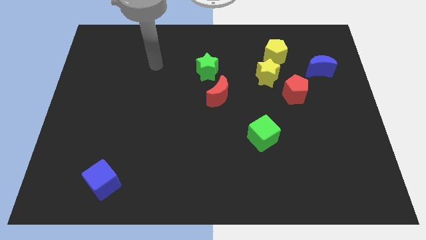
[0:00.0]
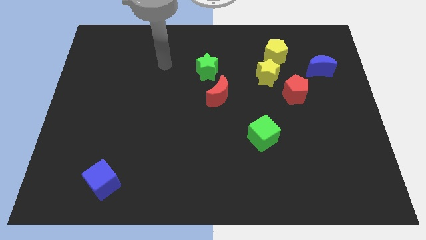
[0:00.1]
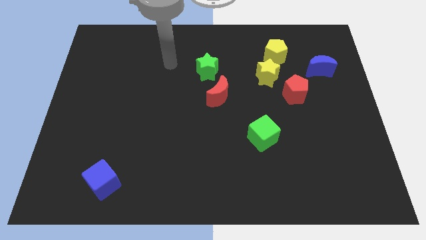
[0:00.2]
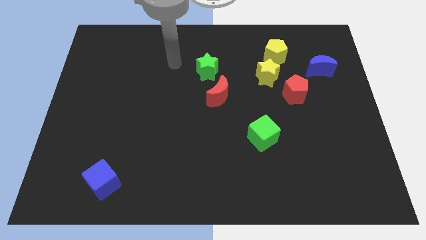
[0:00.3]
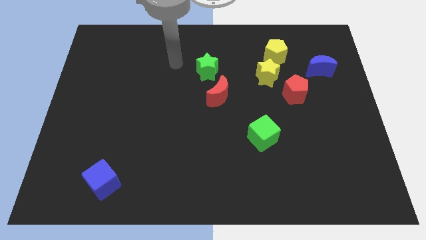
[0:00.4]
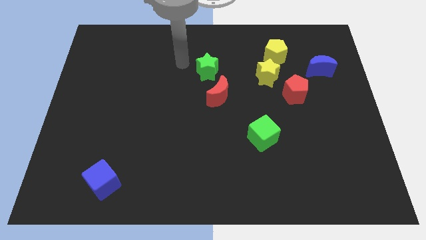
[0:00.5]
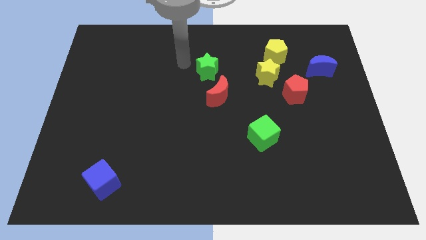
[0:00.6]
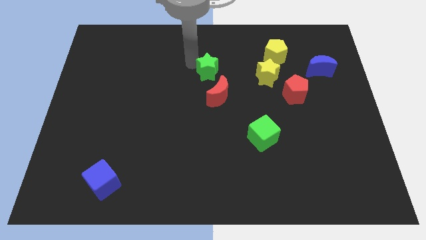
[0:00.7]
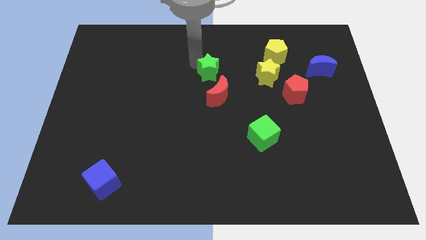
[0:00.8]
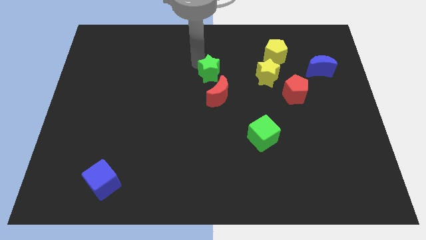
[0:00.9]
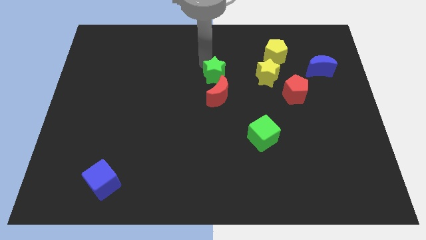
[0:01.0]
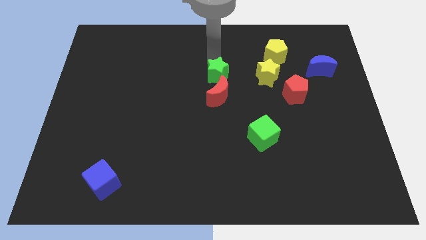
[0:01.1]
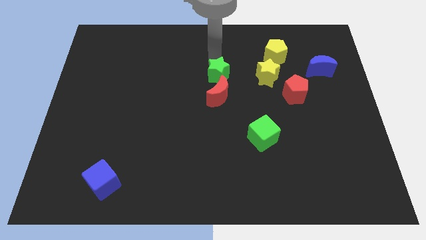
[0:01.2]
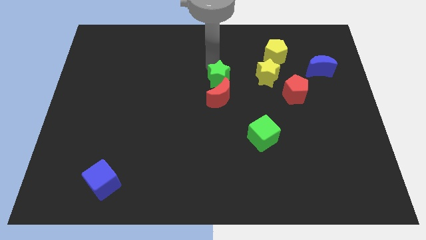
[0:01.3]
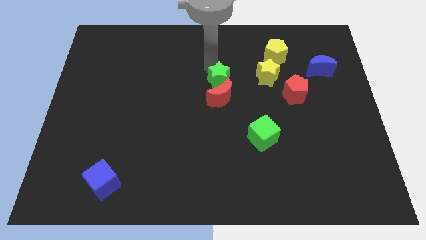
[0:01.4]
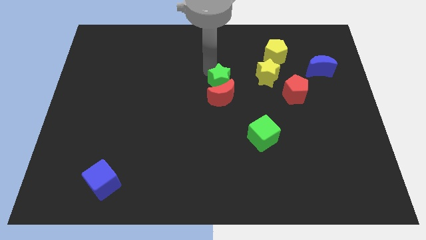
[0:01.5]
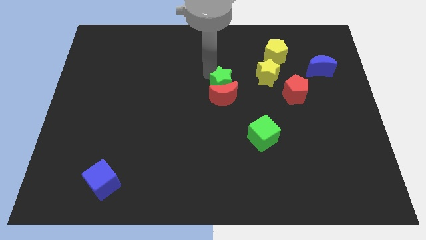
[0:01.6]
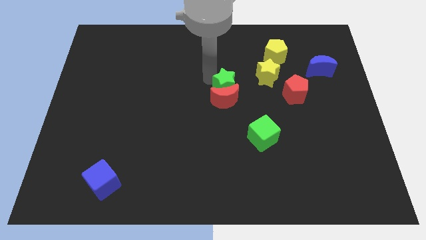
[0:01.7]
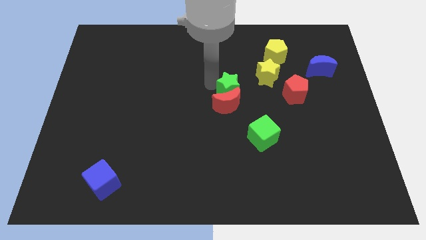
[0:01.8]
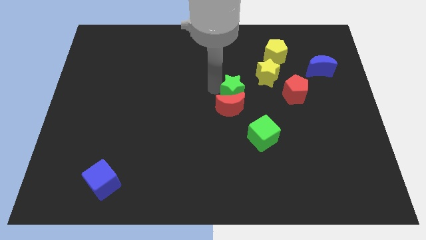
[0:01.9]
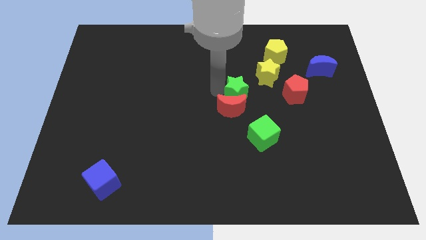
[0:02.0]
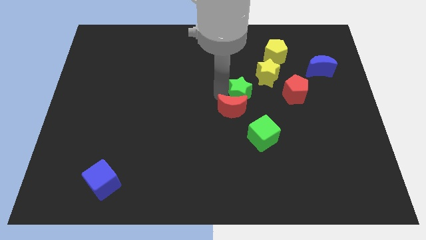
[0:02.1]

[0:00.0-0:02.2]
push the green star into the red moon

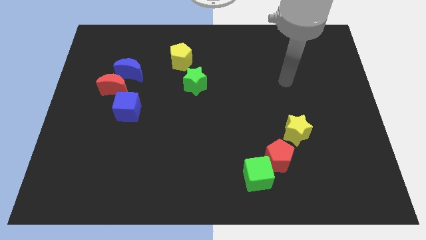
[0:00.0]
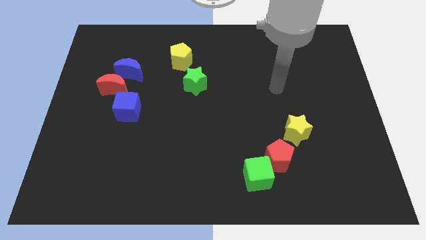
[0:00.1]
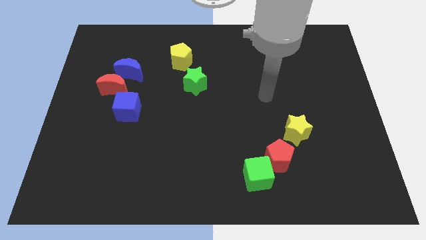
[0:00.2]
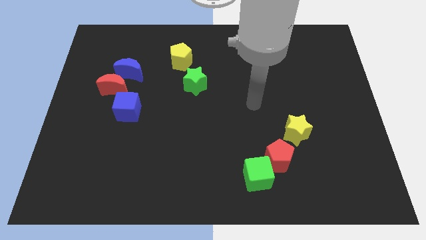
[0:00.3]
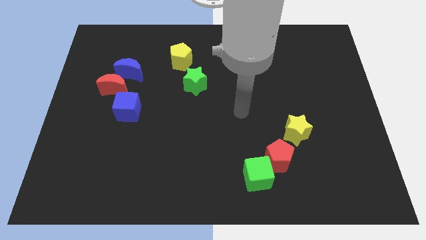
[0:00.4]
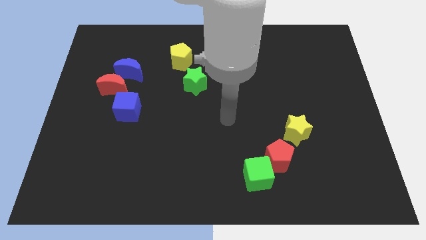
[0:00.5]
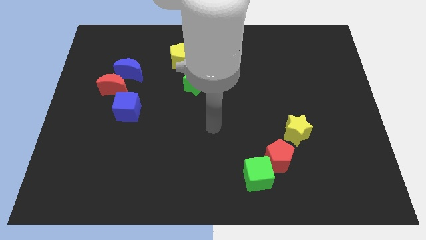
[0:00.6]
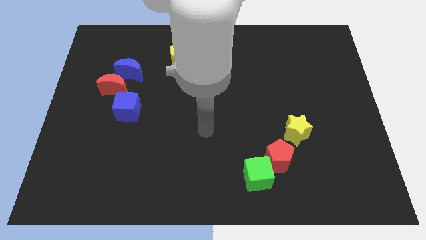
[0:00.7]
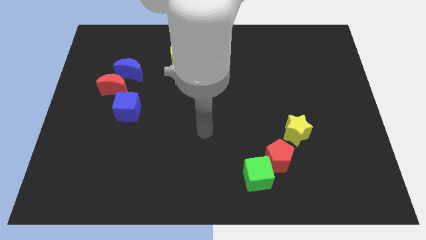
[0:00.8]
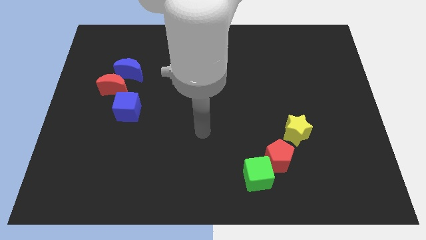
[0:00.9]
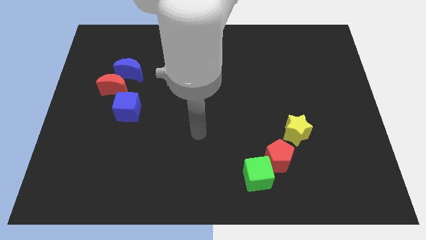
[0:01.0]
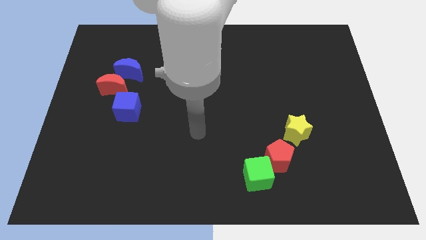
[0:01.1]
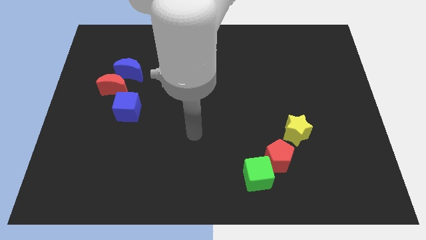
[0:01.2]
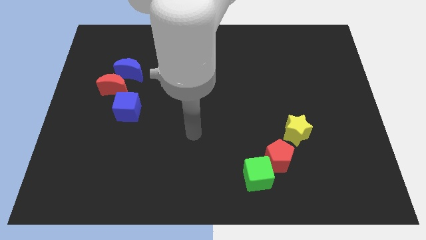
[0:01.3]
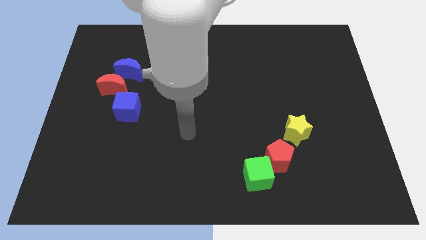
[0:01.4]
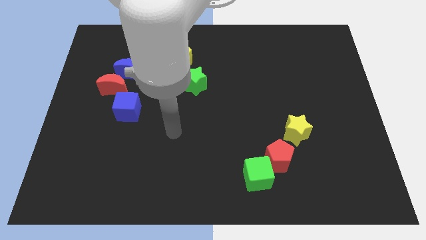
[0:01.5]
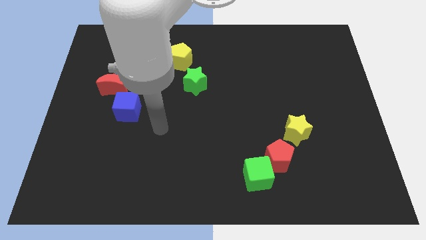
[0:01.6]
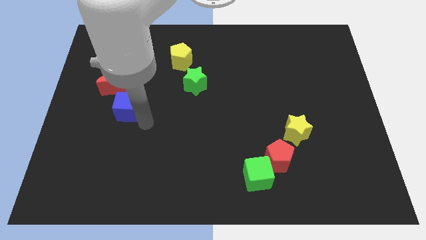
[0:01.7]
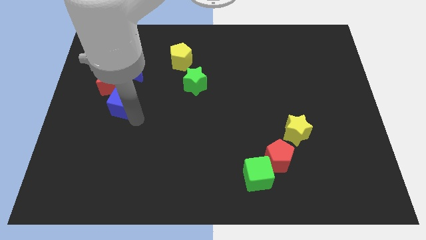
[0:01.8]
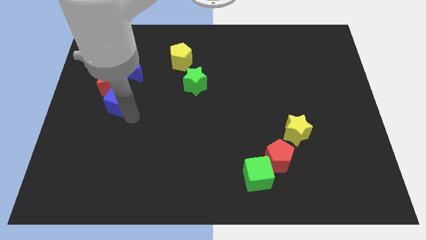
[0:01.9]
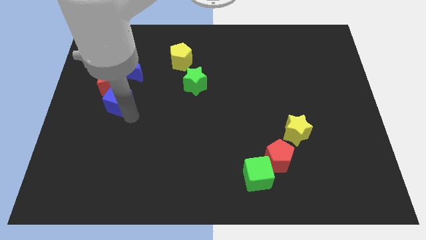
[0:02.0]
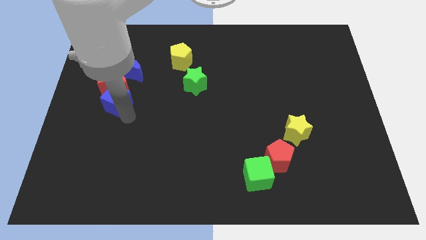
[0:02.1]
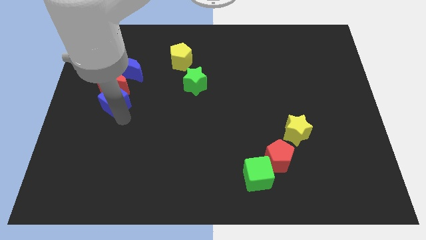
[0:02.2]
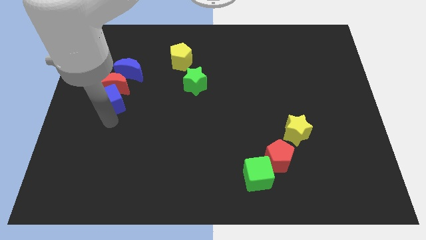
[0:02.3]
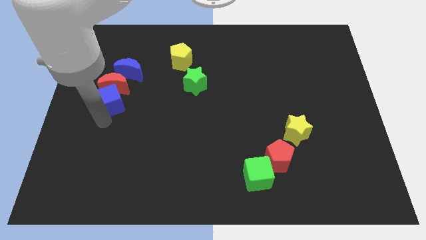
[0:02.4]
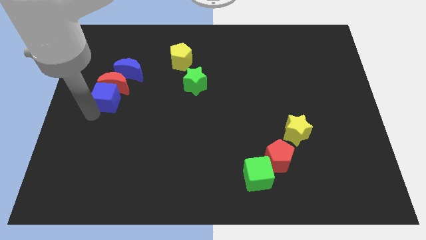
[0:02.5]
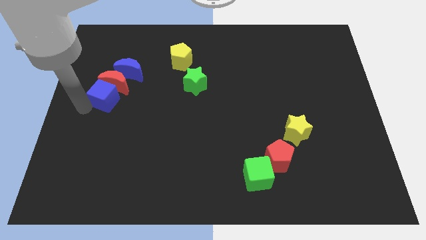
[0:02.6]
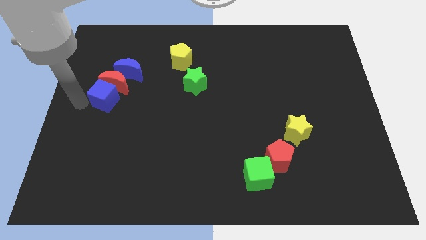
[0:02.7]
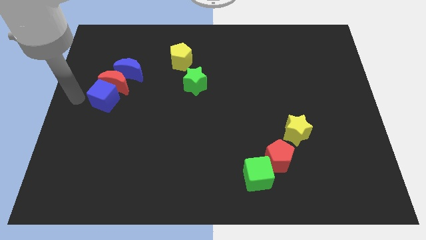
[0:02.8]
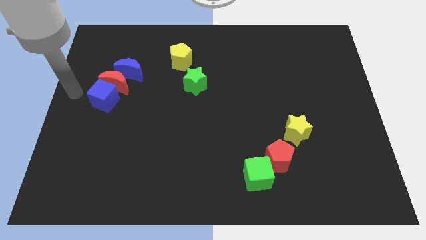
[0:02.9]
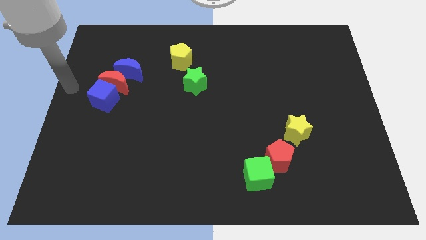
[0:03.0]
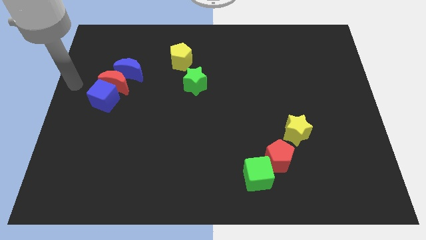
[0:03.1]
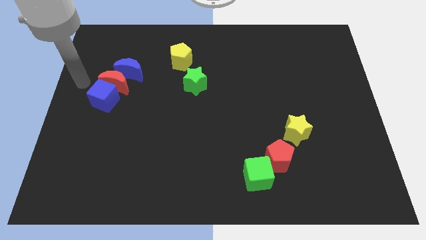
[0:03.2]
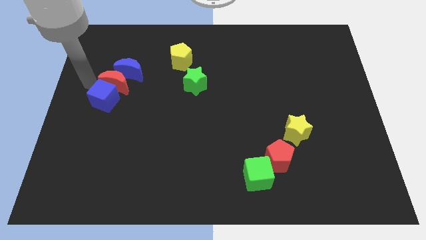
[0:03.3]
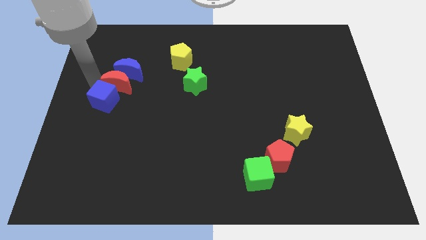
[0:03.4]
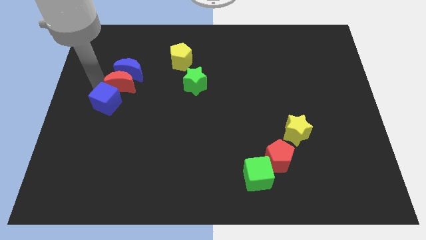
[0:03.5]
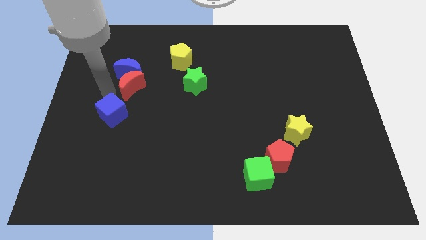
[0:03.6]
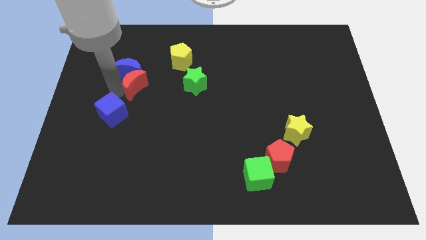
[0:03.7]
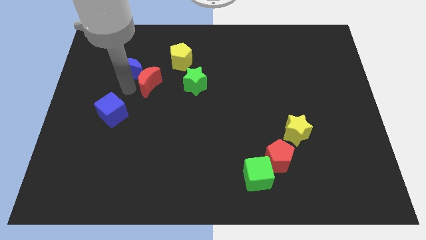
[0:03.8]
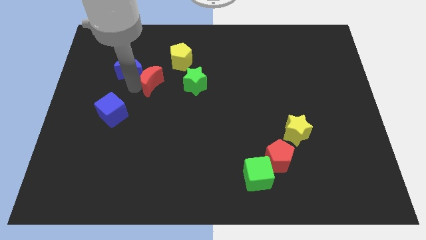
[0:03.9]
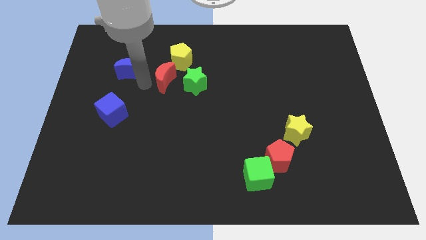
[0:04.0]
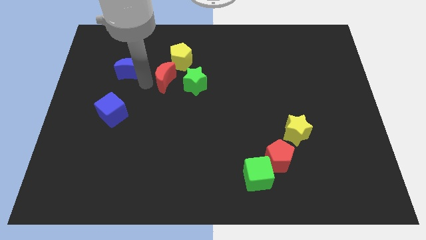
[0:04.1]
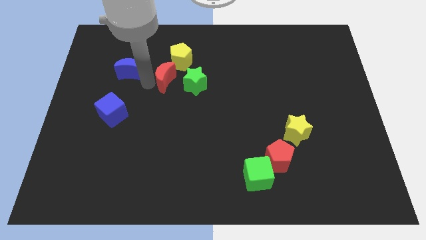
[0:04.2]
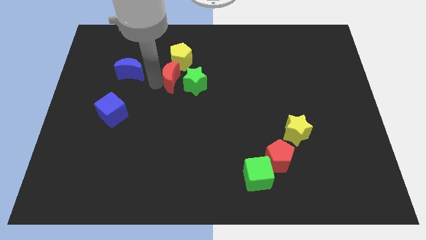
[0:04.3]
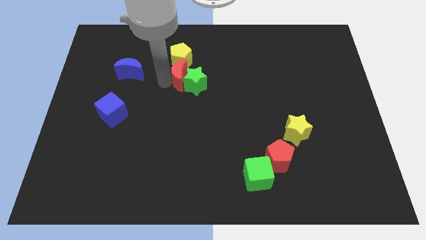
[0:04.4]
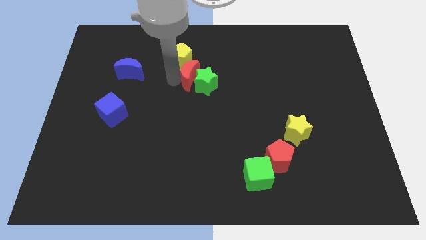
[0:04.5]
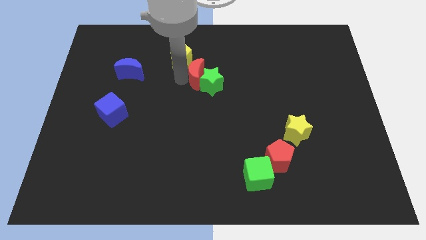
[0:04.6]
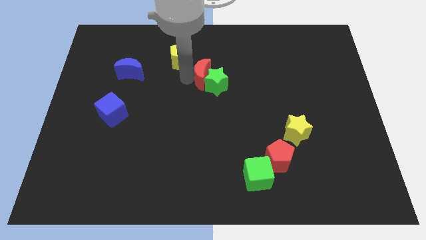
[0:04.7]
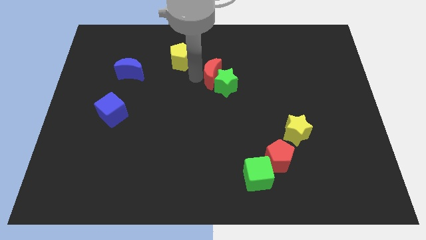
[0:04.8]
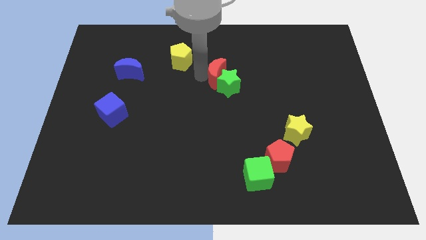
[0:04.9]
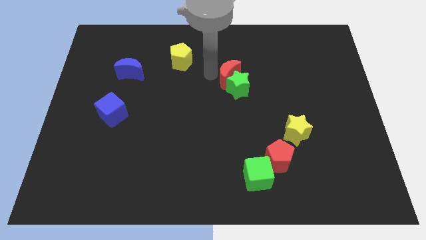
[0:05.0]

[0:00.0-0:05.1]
separate red moon from the blue cube

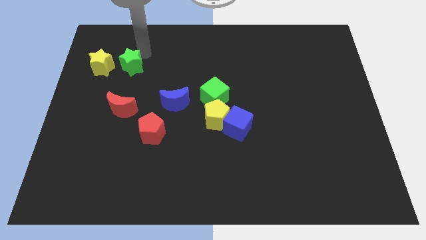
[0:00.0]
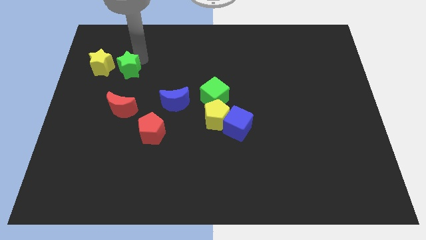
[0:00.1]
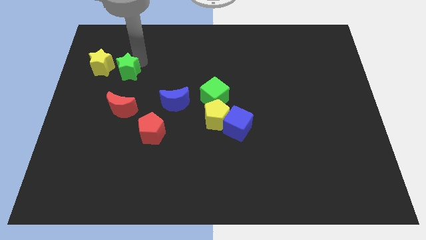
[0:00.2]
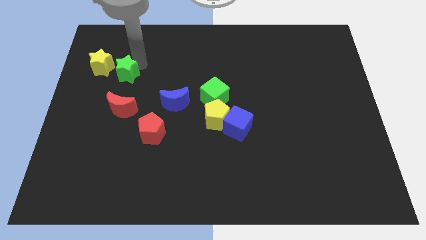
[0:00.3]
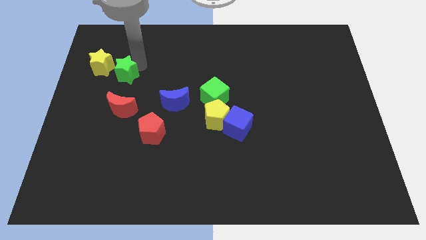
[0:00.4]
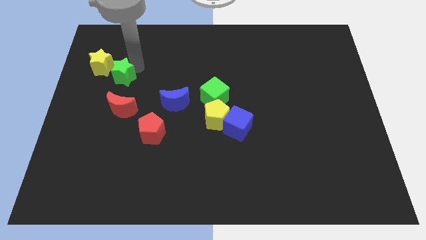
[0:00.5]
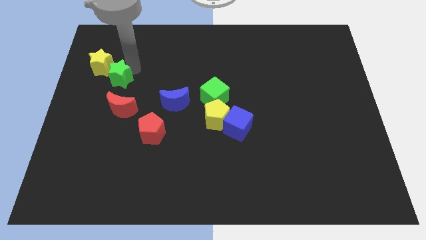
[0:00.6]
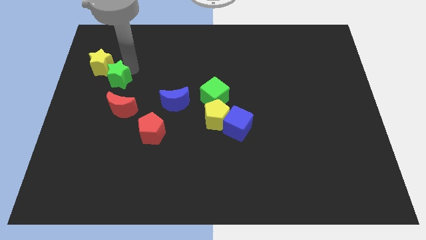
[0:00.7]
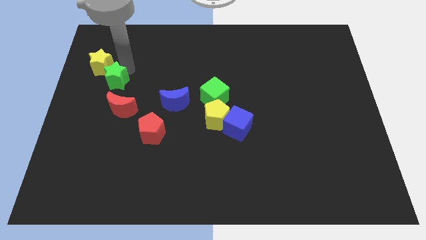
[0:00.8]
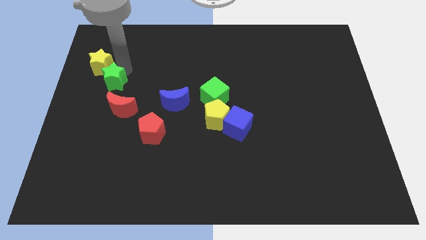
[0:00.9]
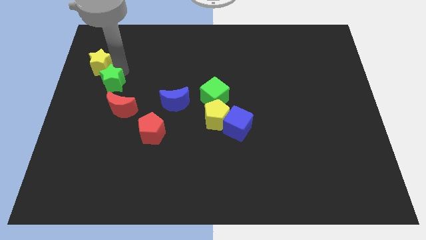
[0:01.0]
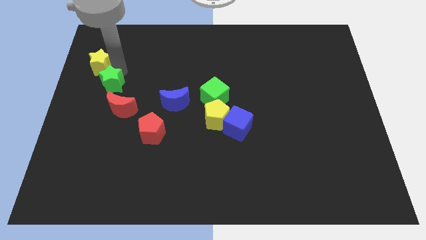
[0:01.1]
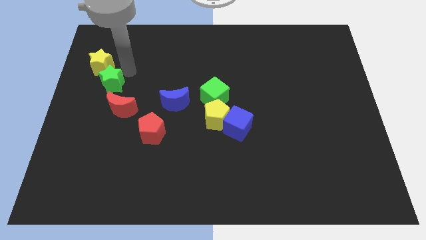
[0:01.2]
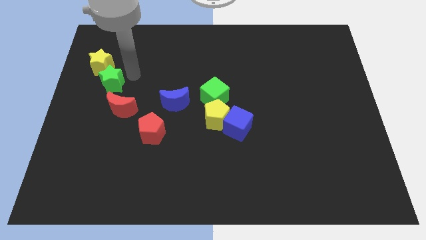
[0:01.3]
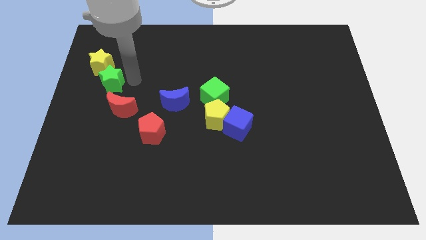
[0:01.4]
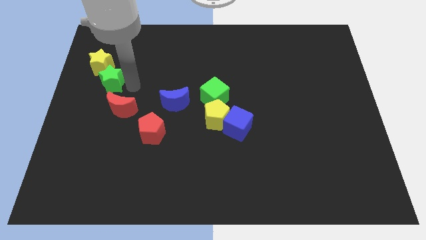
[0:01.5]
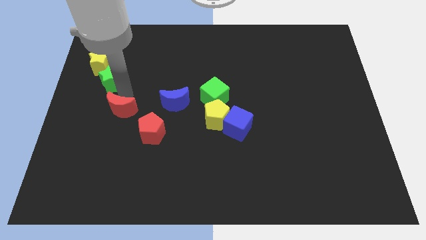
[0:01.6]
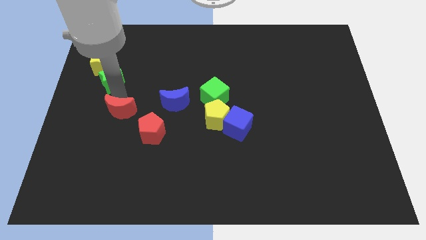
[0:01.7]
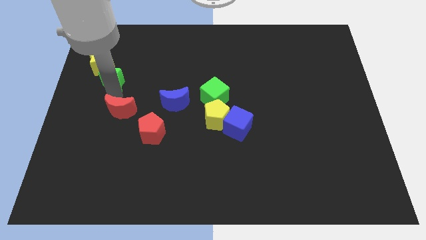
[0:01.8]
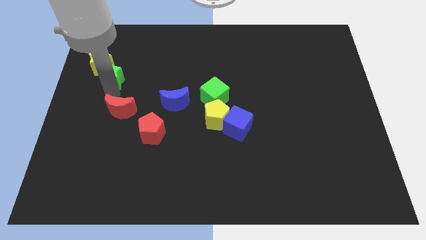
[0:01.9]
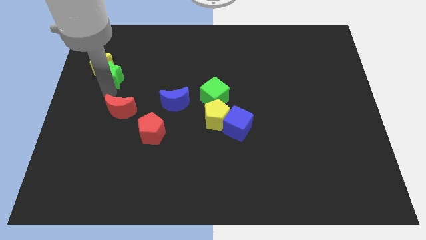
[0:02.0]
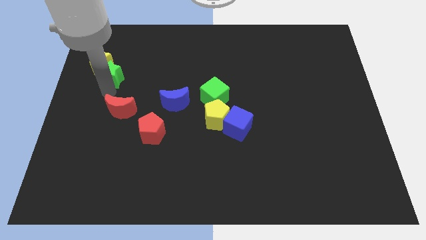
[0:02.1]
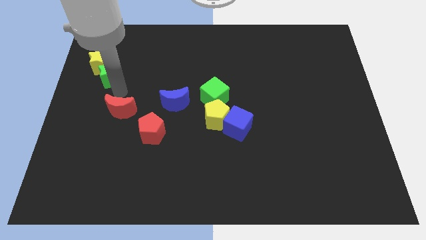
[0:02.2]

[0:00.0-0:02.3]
push green star below yellow star
